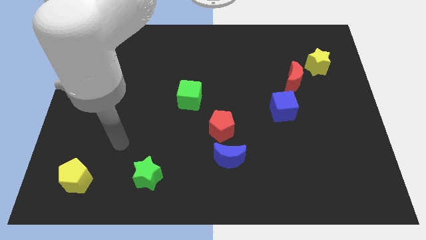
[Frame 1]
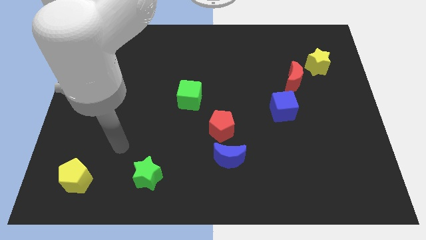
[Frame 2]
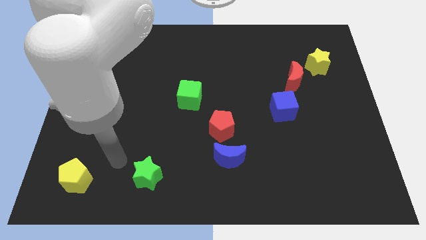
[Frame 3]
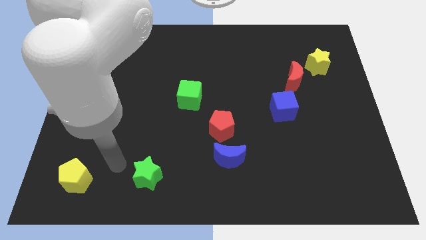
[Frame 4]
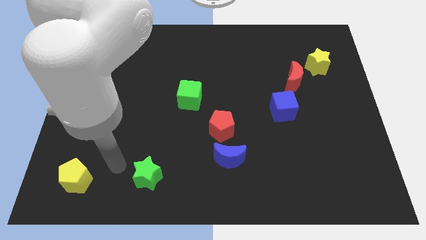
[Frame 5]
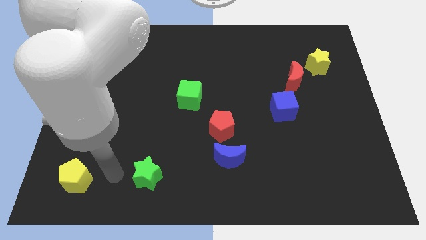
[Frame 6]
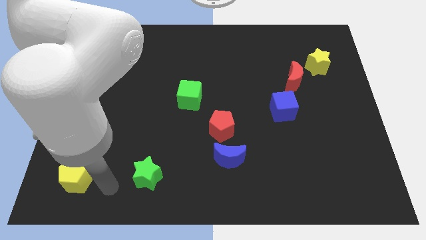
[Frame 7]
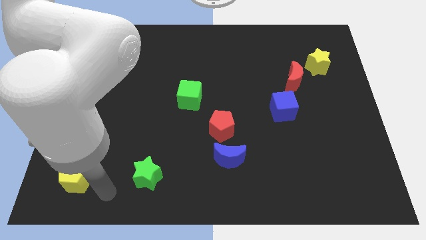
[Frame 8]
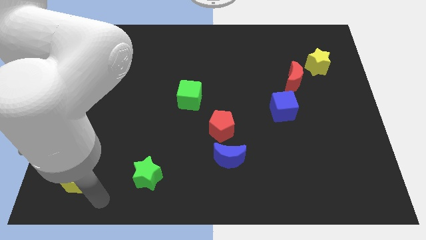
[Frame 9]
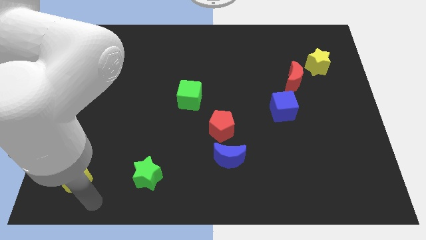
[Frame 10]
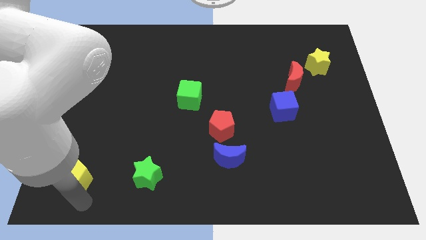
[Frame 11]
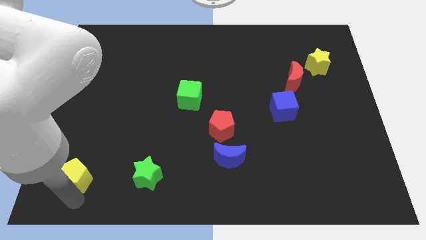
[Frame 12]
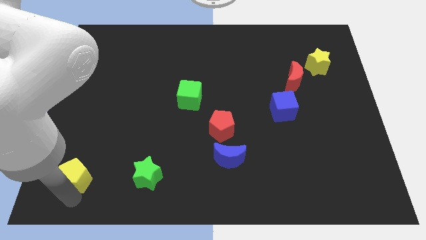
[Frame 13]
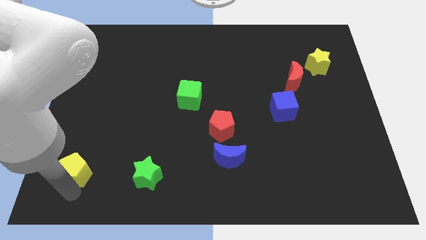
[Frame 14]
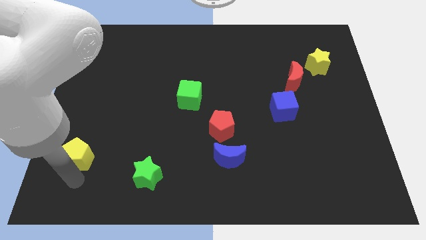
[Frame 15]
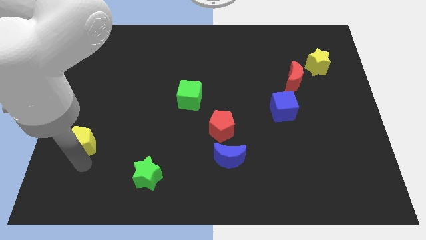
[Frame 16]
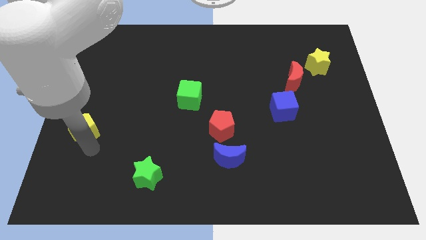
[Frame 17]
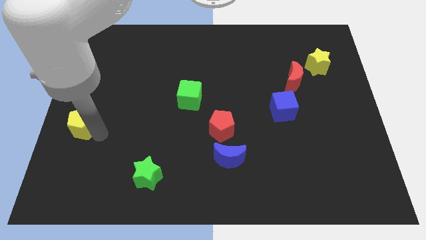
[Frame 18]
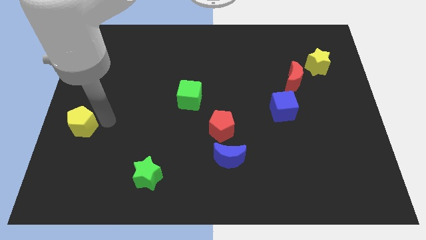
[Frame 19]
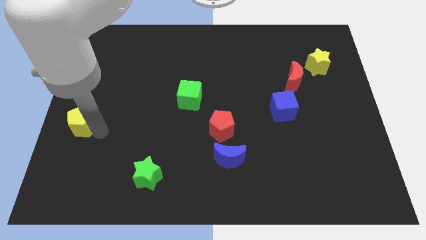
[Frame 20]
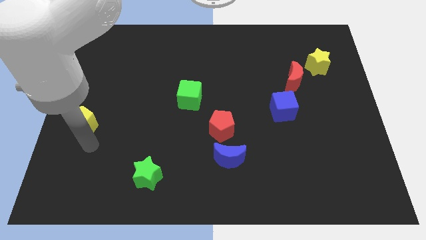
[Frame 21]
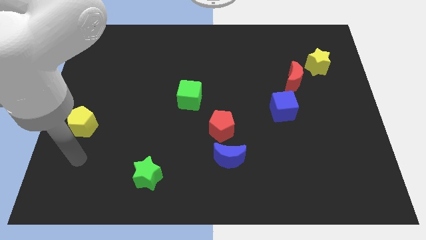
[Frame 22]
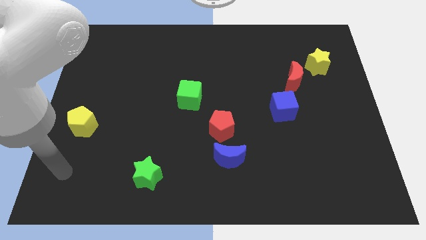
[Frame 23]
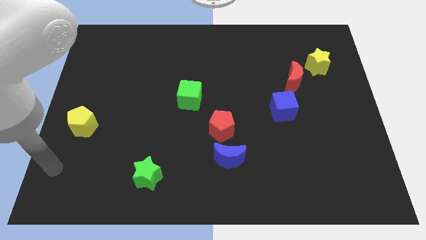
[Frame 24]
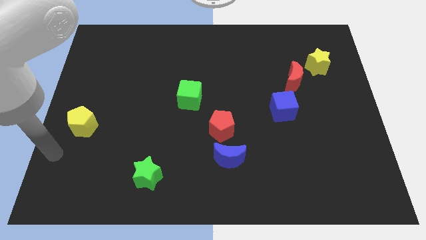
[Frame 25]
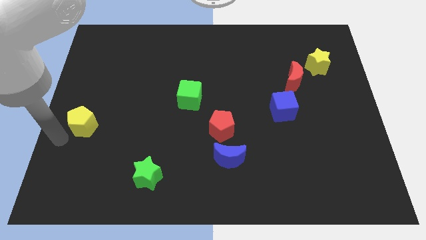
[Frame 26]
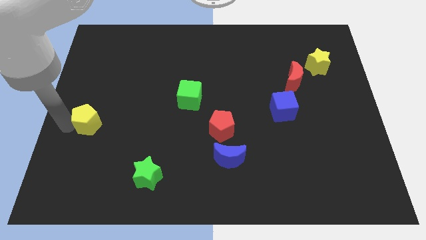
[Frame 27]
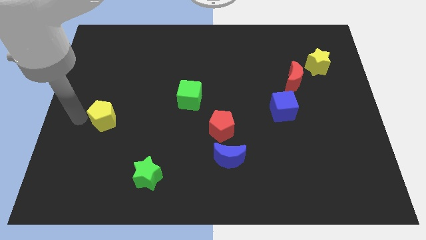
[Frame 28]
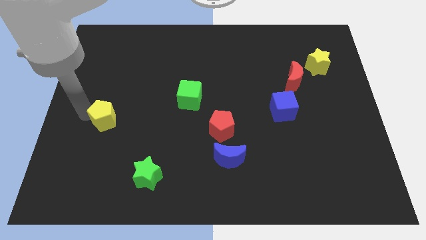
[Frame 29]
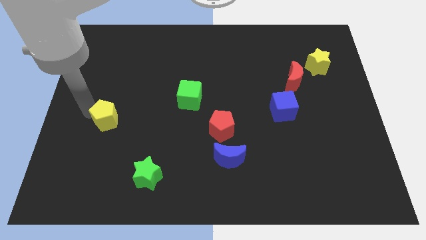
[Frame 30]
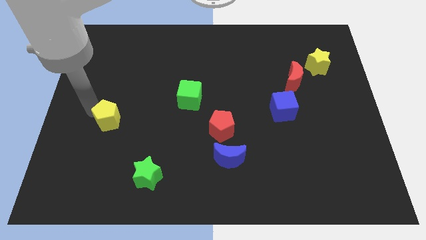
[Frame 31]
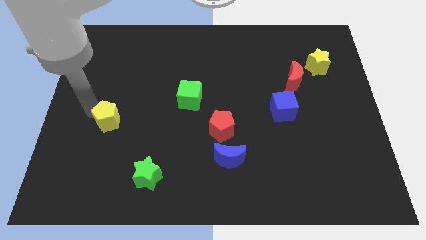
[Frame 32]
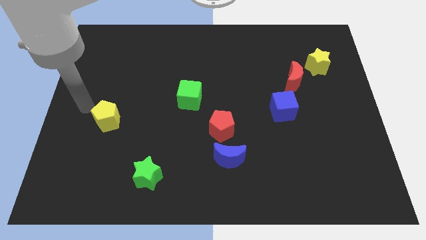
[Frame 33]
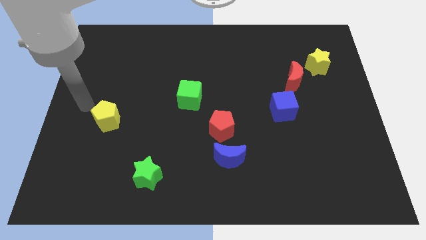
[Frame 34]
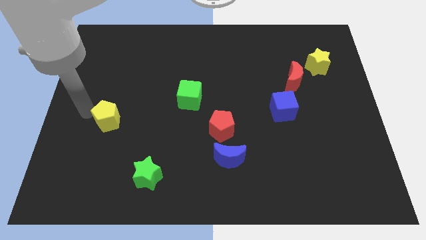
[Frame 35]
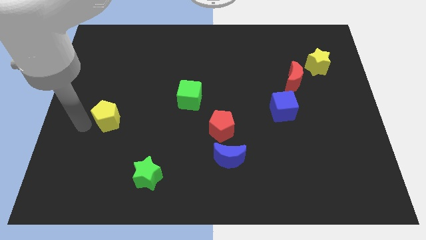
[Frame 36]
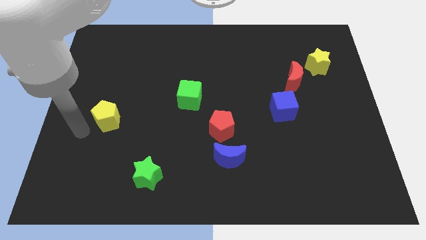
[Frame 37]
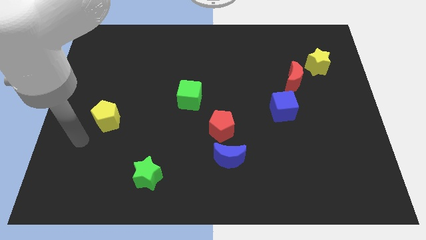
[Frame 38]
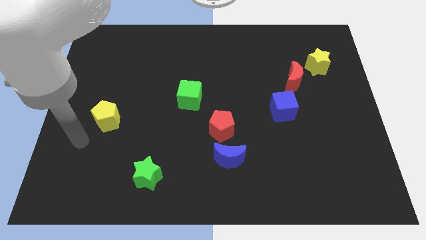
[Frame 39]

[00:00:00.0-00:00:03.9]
push the yellow pentagon slightly to the top

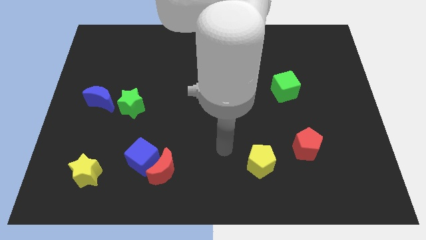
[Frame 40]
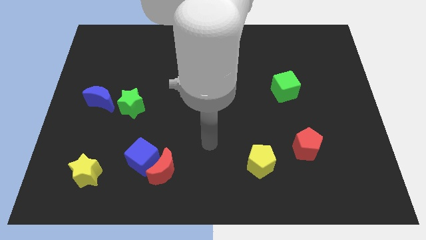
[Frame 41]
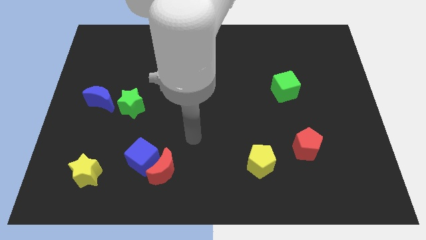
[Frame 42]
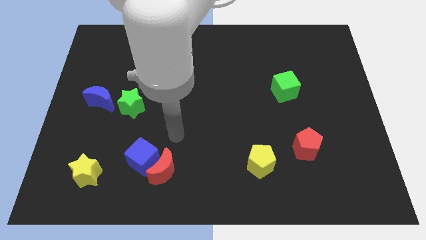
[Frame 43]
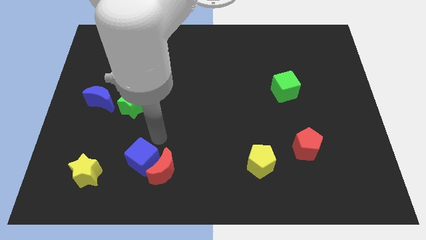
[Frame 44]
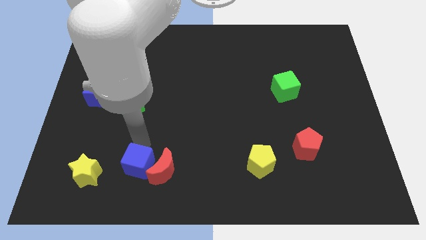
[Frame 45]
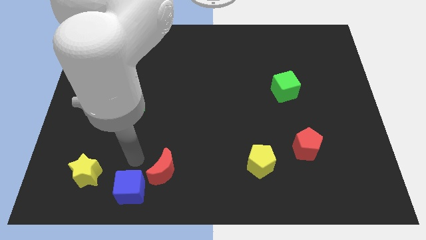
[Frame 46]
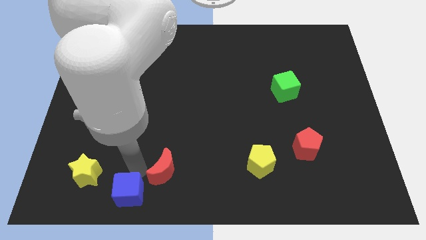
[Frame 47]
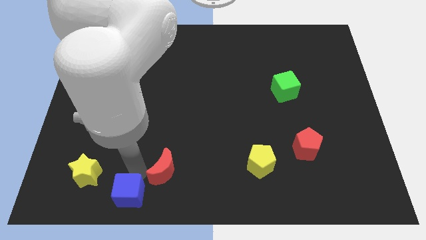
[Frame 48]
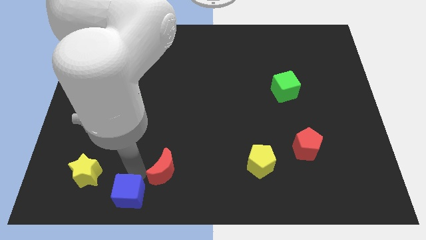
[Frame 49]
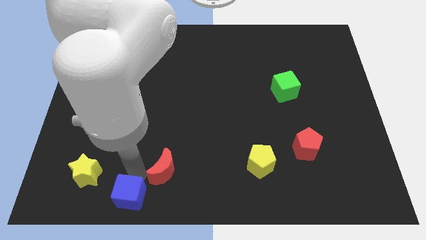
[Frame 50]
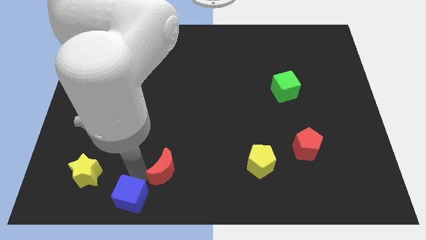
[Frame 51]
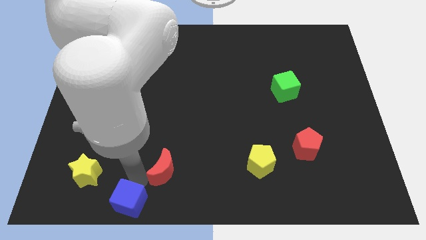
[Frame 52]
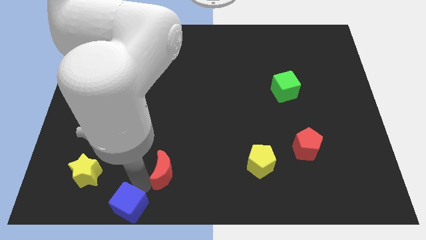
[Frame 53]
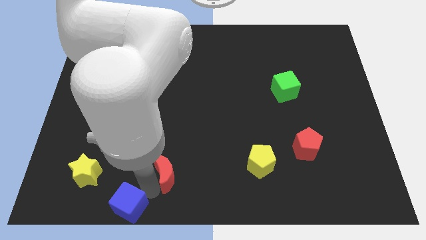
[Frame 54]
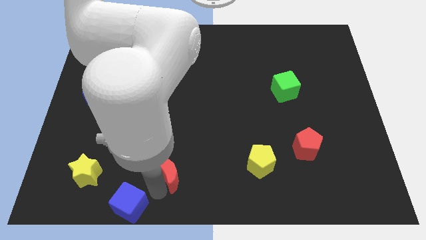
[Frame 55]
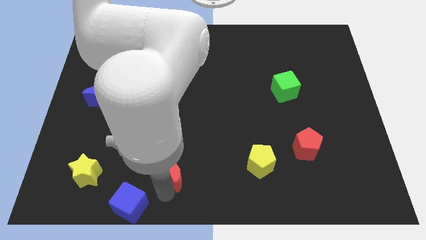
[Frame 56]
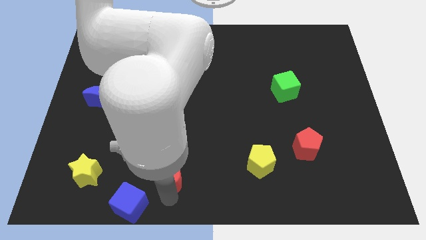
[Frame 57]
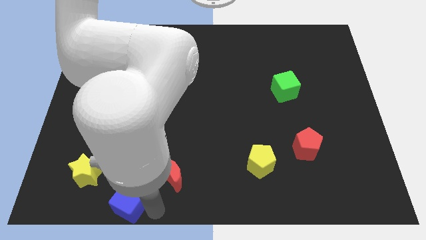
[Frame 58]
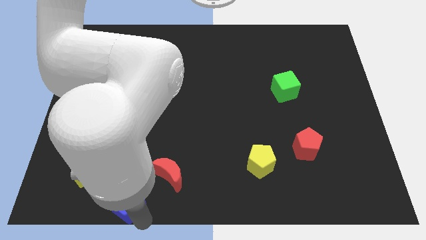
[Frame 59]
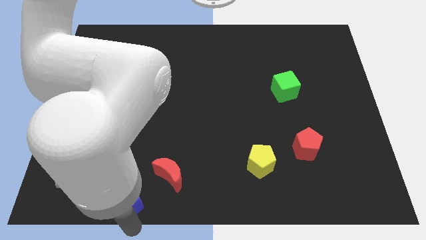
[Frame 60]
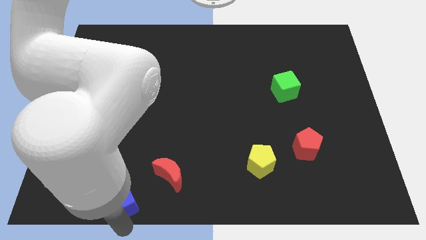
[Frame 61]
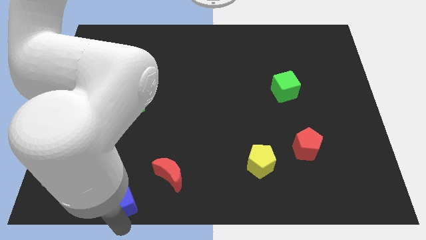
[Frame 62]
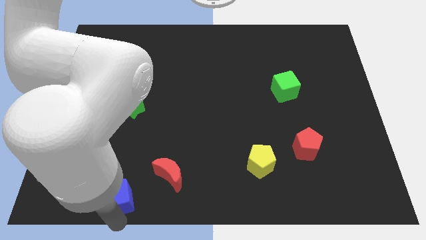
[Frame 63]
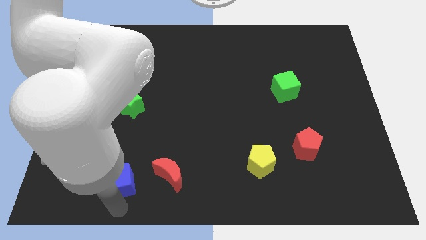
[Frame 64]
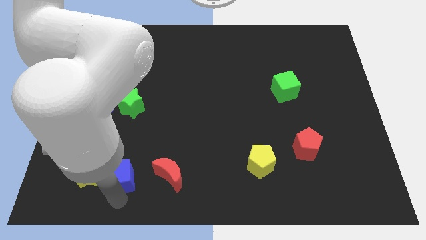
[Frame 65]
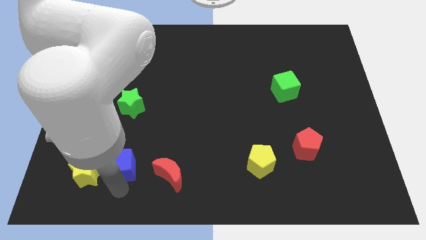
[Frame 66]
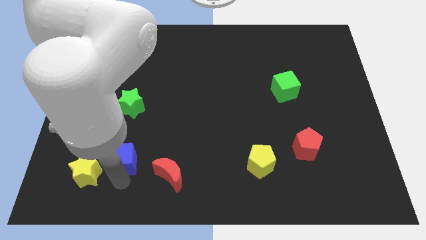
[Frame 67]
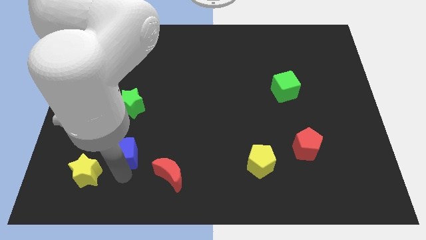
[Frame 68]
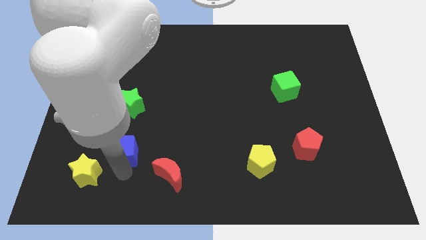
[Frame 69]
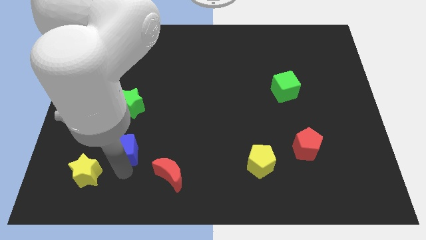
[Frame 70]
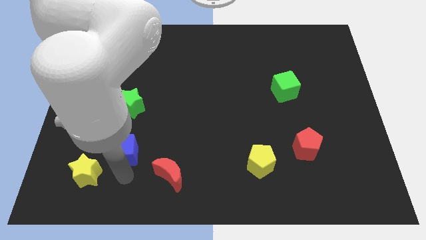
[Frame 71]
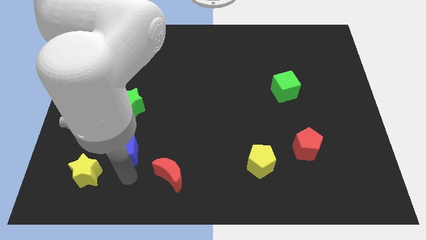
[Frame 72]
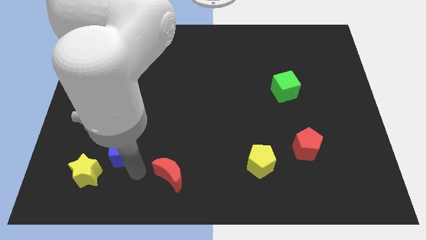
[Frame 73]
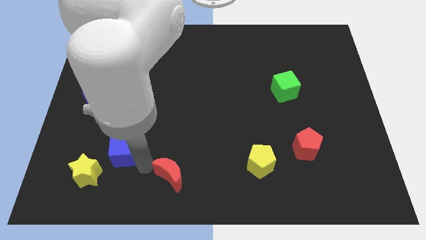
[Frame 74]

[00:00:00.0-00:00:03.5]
push blue cube below green star

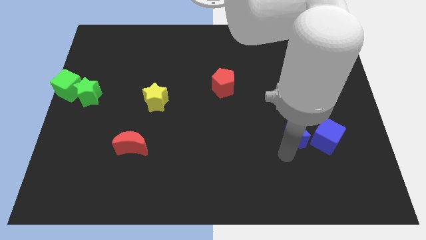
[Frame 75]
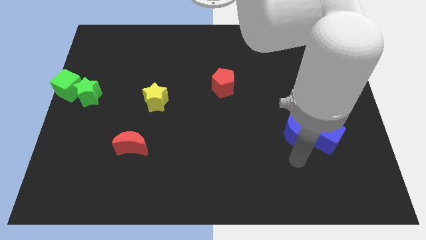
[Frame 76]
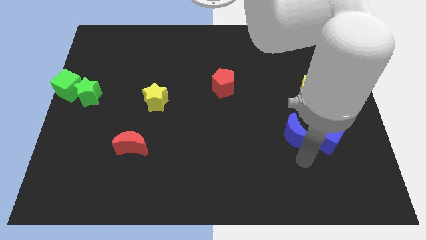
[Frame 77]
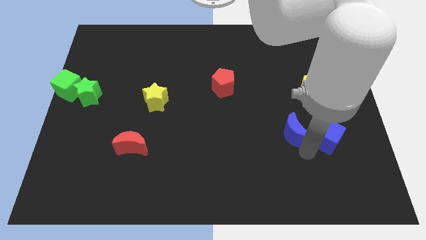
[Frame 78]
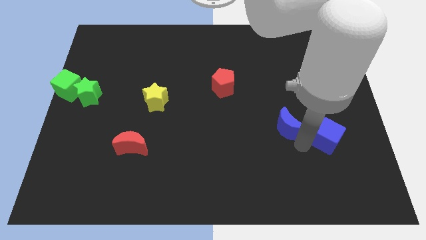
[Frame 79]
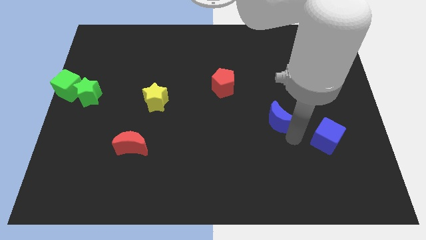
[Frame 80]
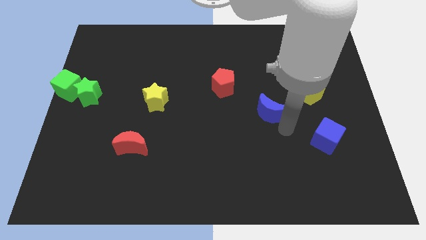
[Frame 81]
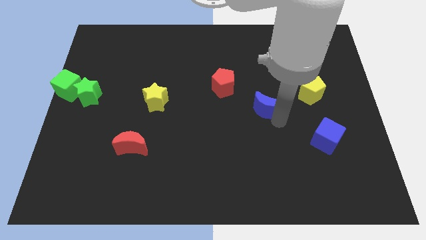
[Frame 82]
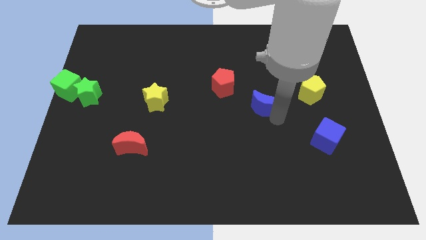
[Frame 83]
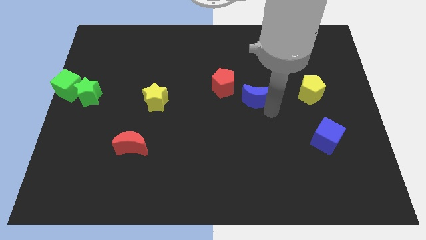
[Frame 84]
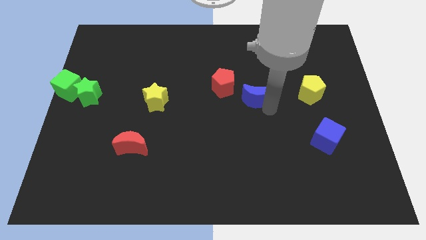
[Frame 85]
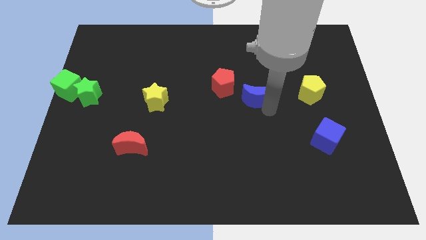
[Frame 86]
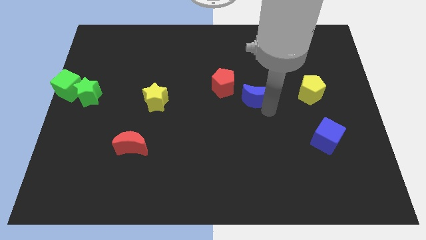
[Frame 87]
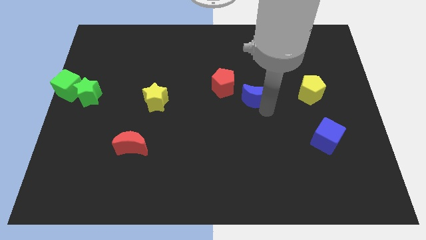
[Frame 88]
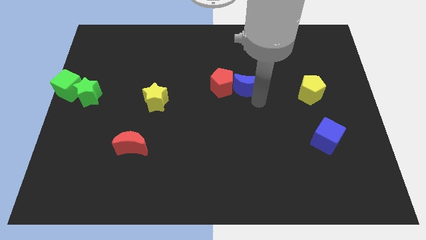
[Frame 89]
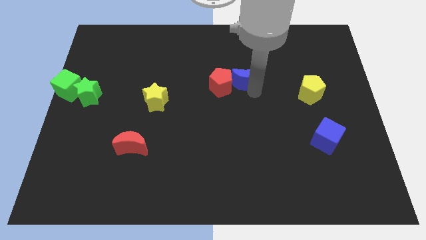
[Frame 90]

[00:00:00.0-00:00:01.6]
push the blue crescent to the right of the red pentagon
